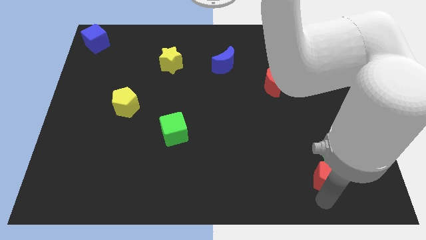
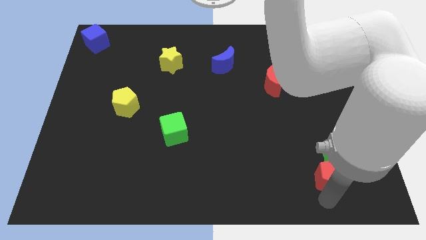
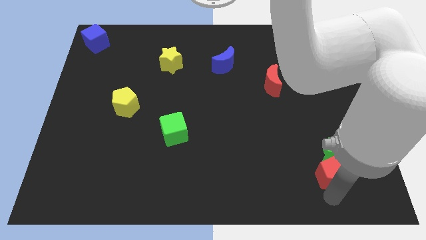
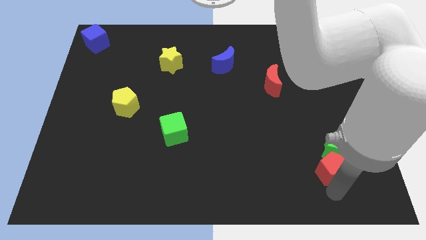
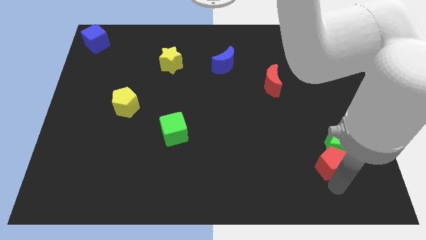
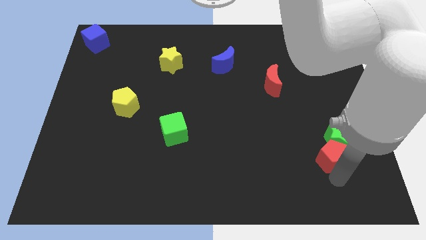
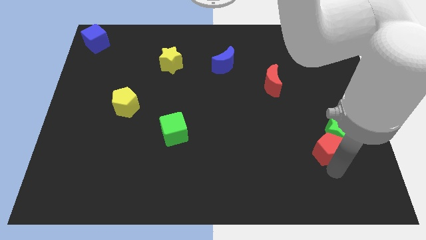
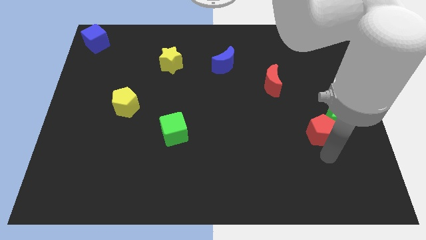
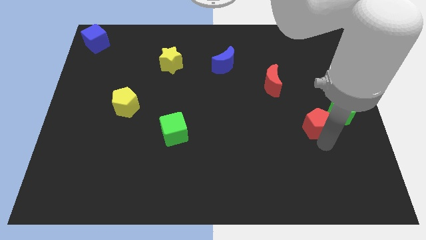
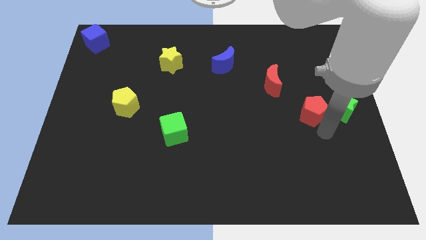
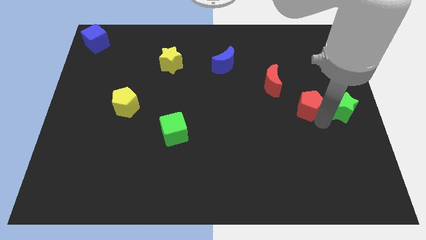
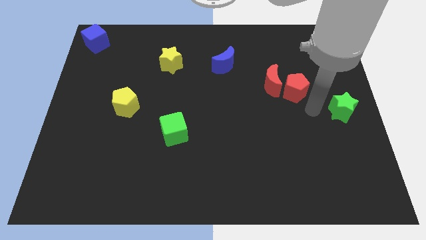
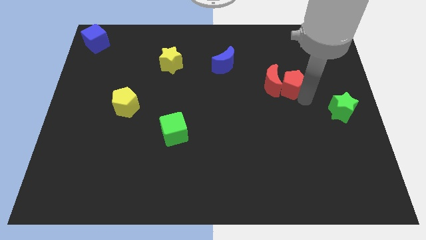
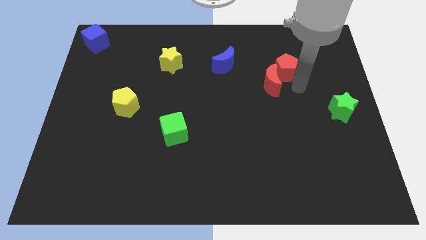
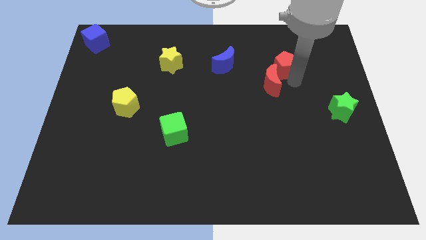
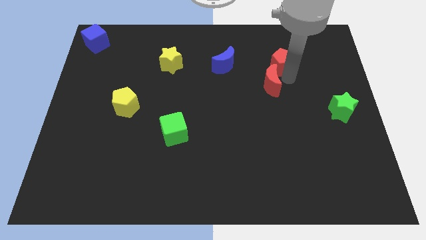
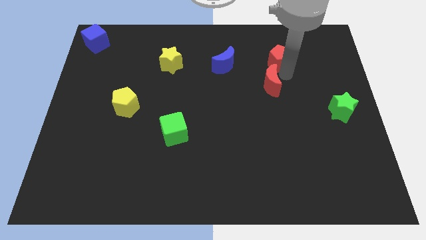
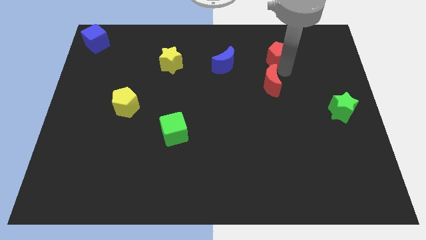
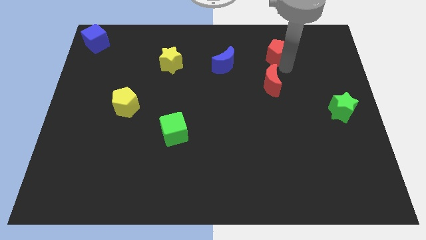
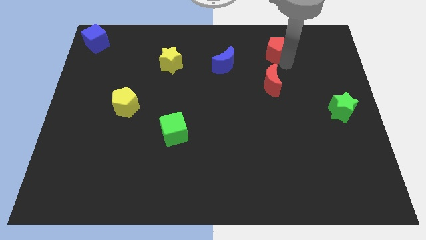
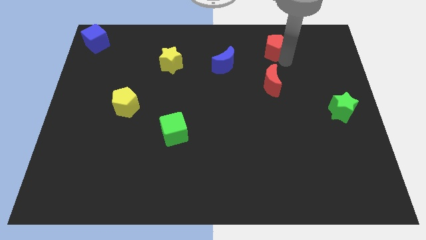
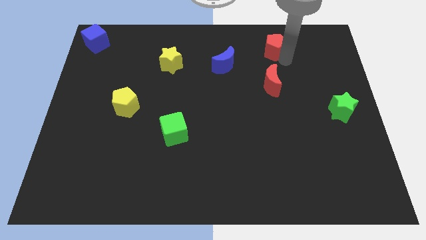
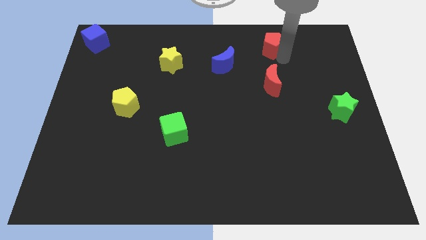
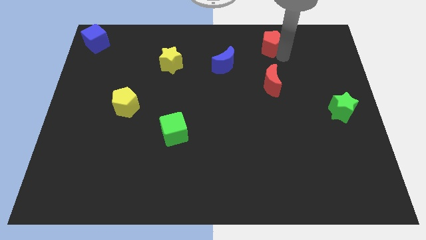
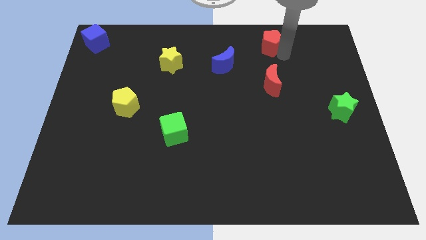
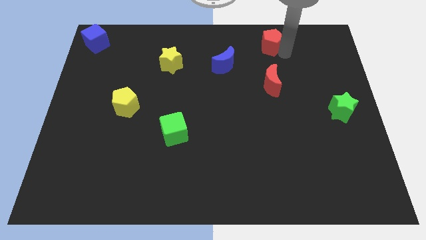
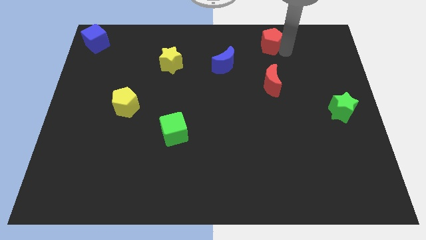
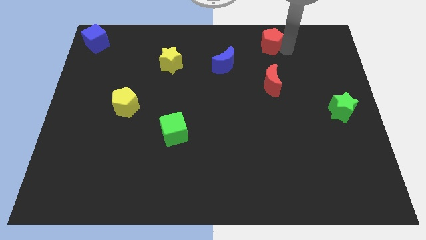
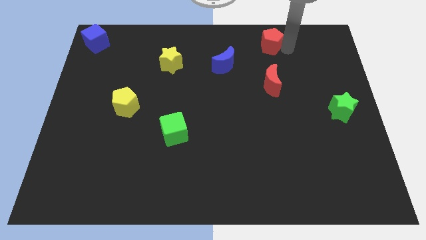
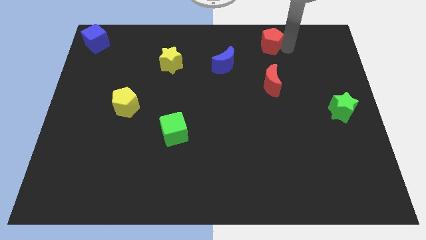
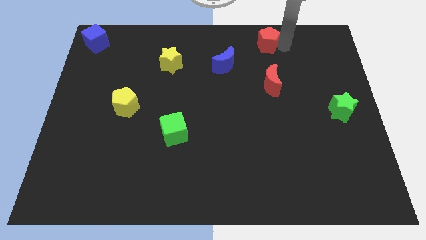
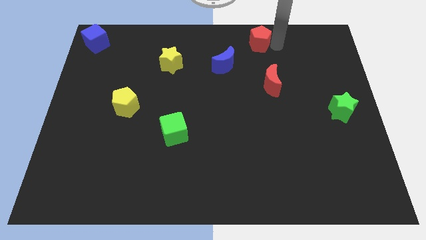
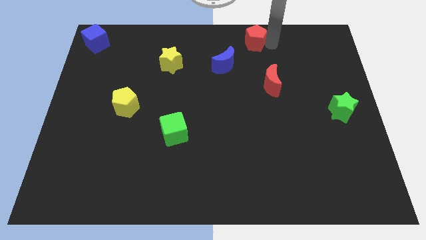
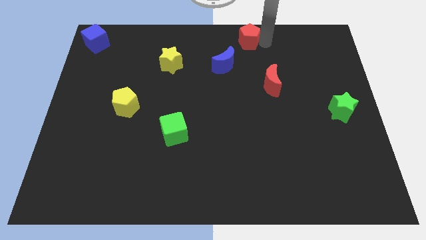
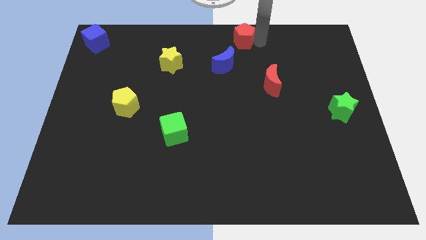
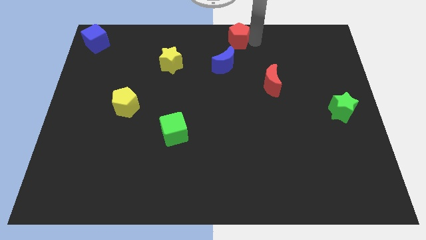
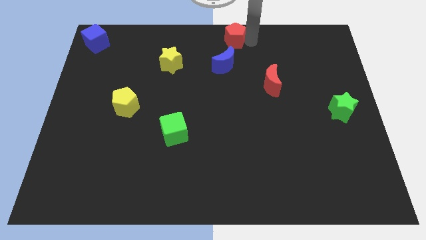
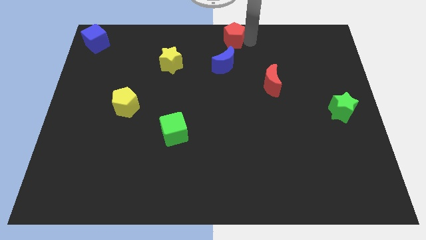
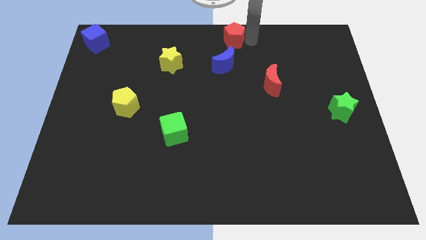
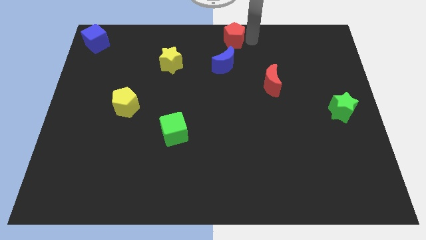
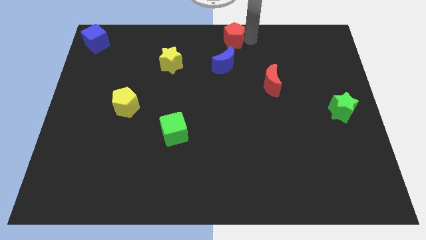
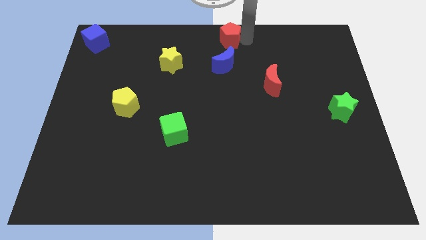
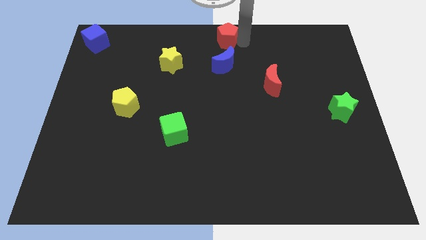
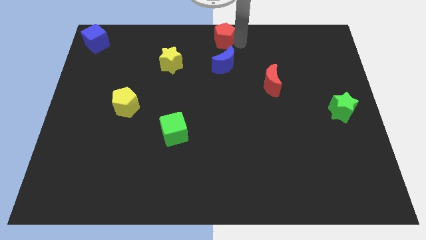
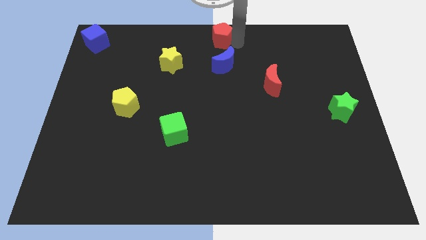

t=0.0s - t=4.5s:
move red pentagon above blue moon

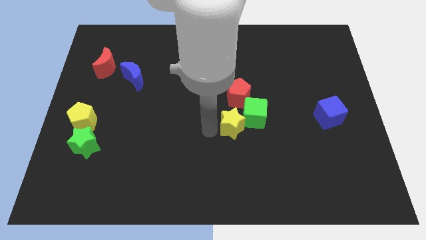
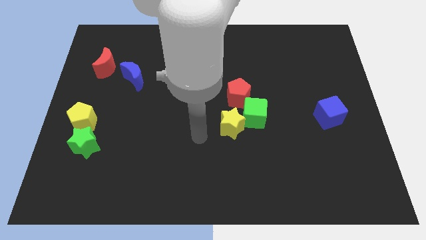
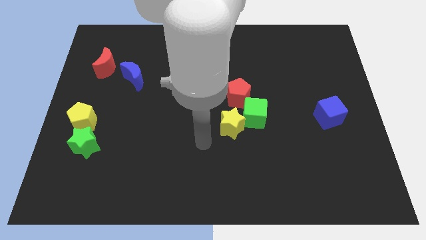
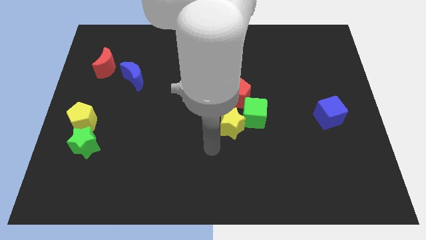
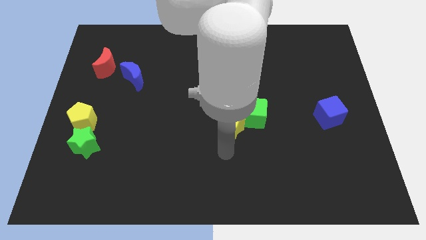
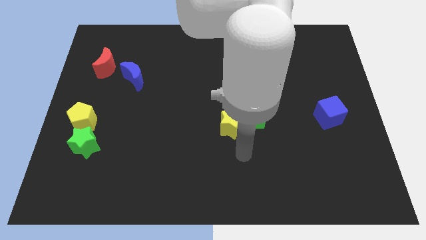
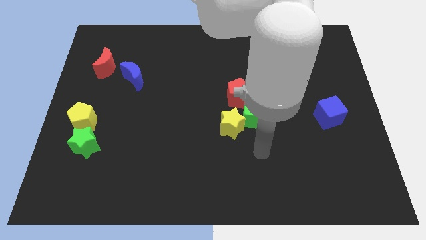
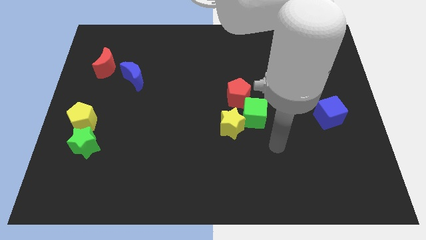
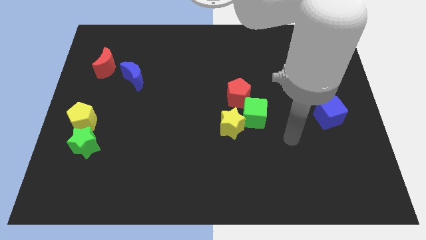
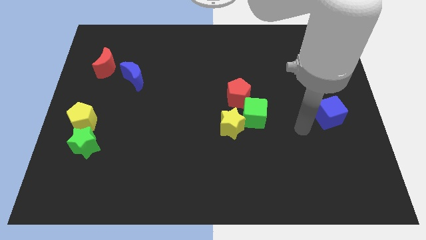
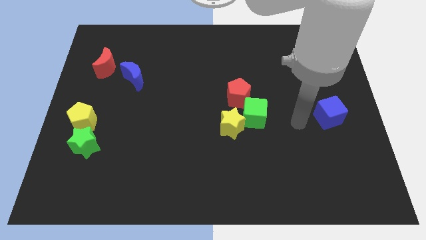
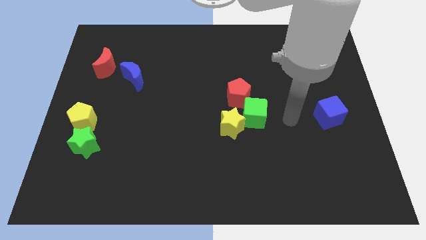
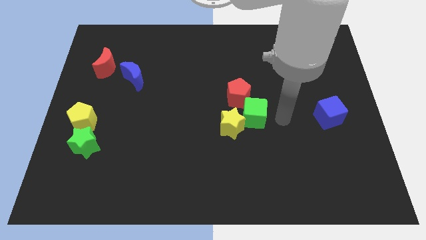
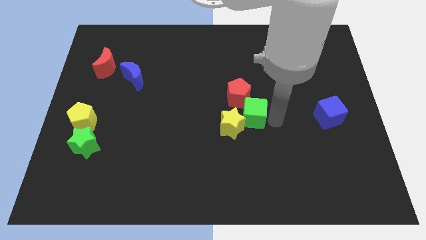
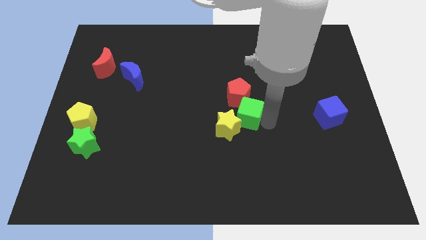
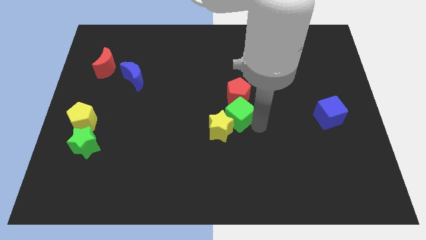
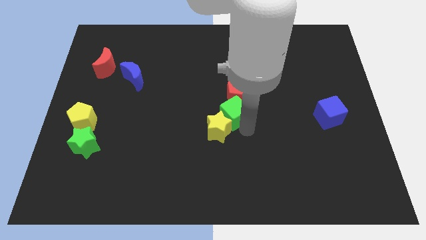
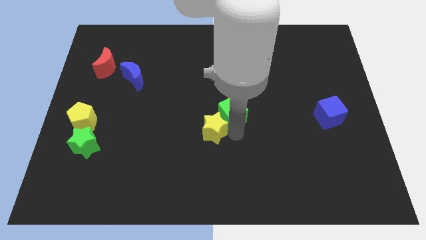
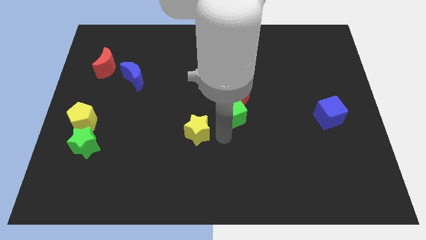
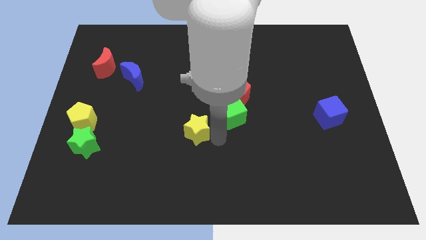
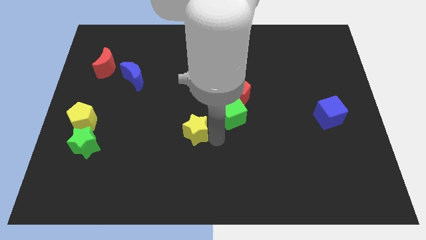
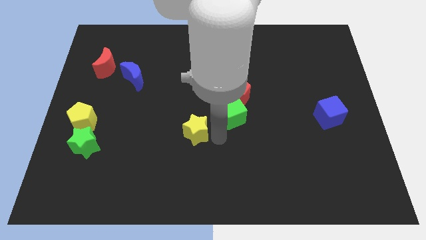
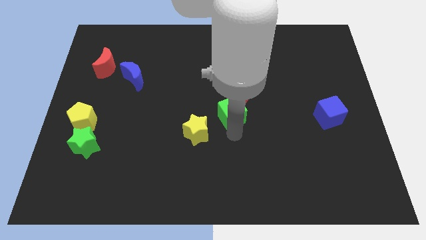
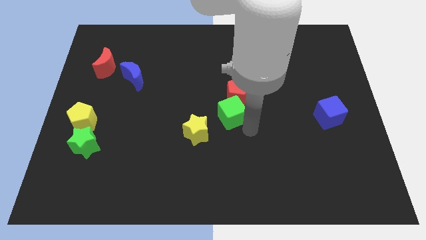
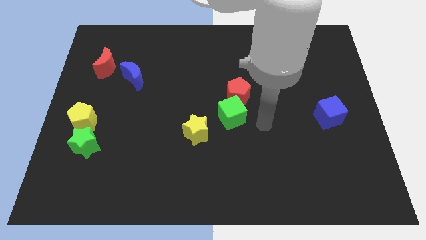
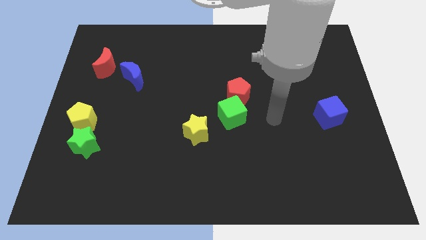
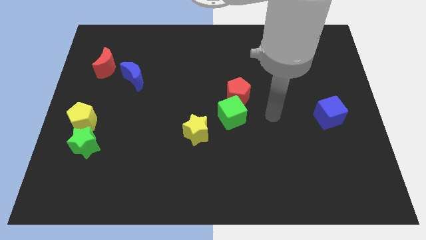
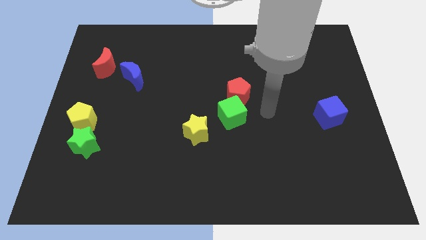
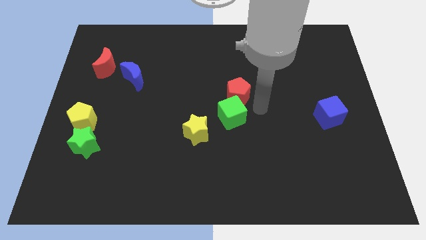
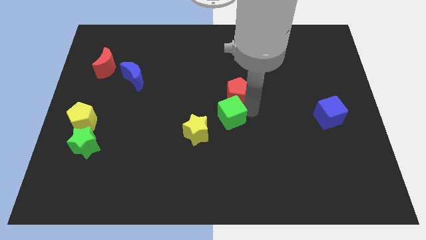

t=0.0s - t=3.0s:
push the green cube to the bottom side of the red pentagon

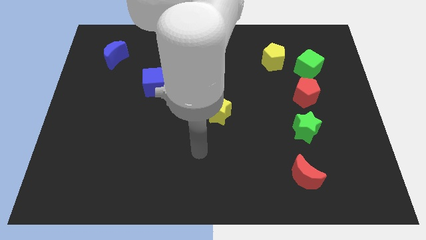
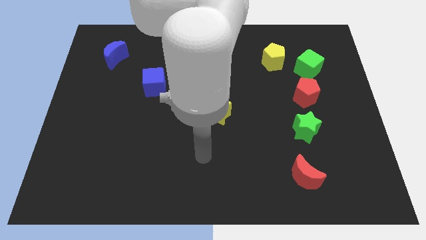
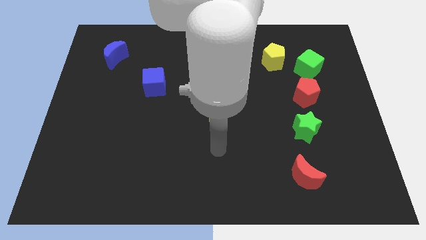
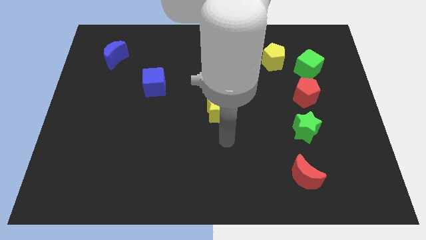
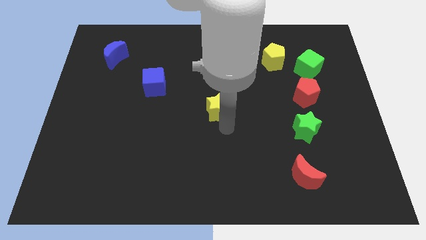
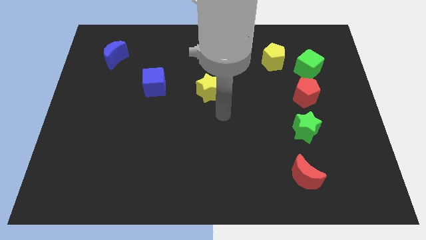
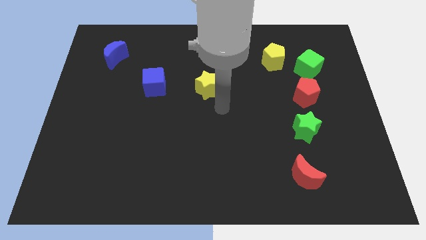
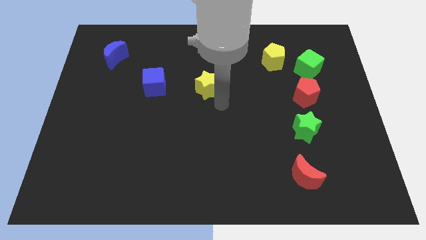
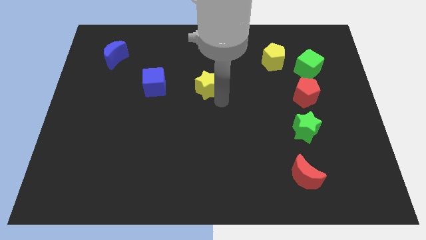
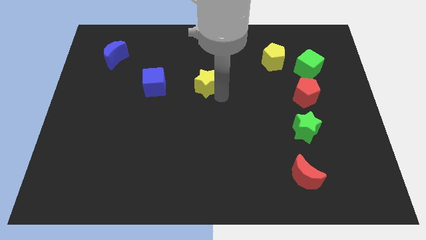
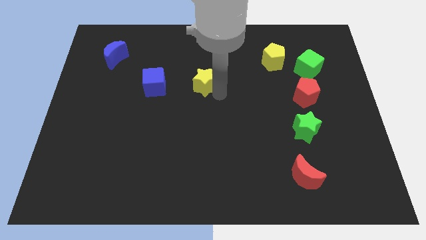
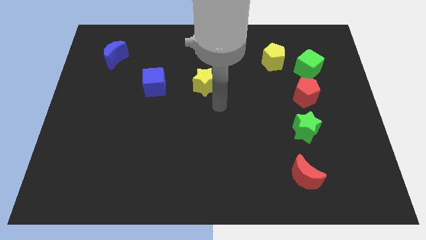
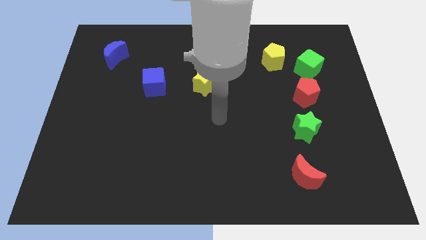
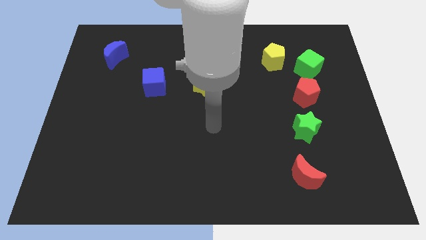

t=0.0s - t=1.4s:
place the yellow star parallel to blue cube

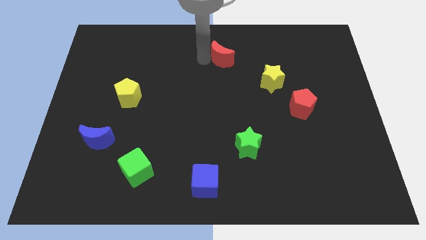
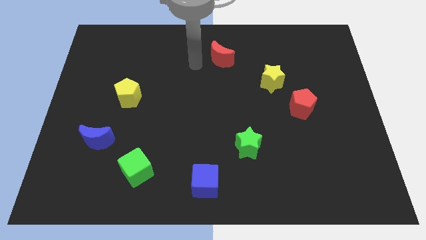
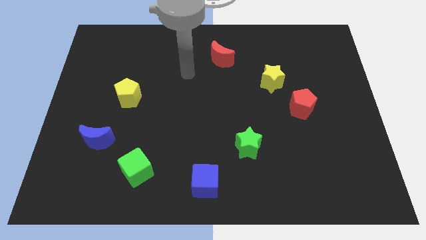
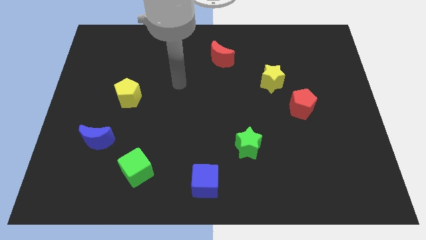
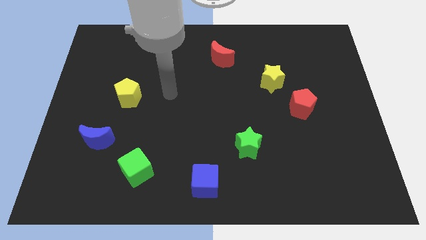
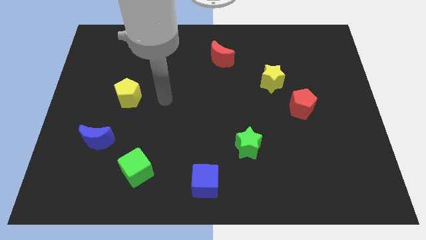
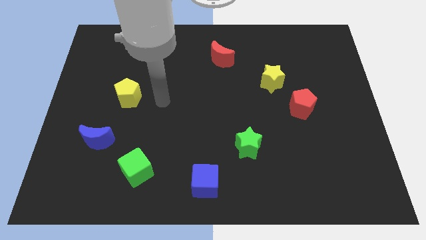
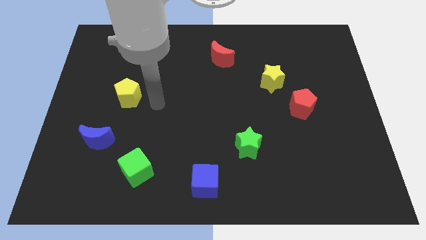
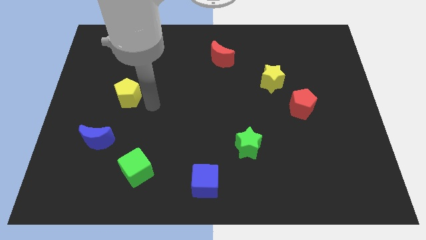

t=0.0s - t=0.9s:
move the arm away from the red moon
